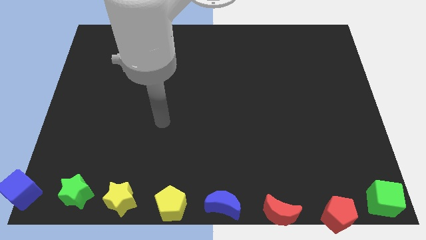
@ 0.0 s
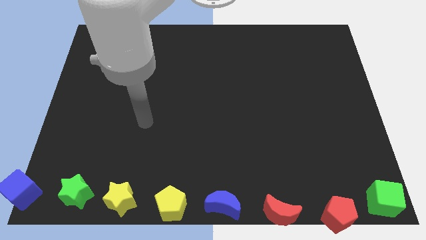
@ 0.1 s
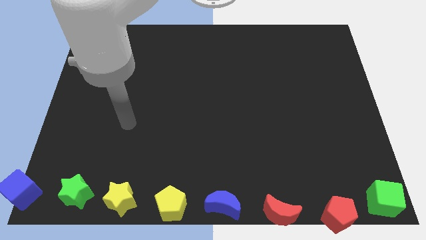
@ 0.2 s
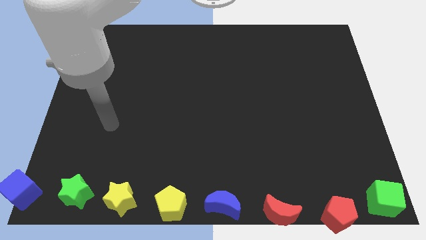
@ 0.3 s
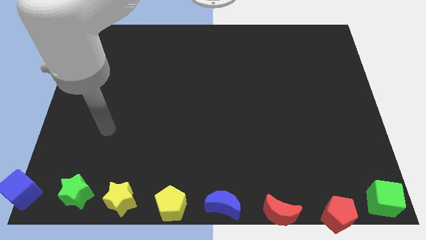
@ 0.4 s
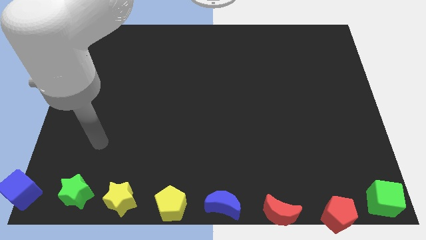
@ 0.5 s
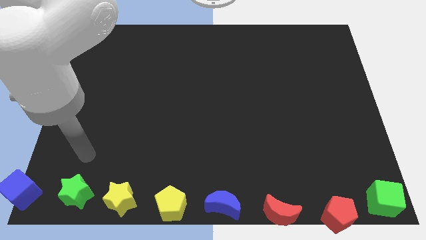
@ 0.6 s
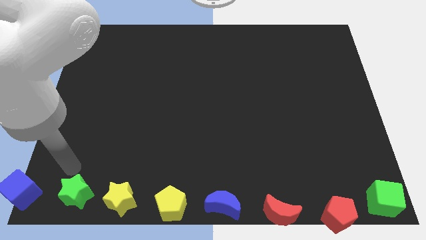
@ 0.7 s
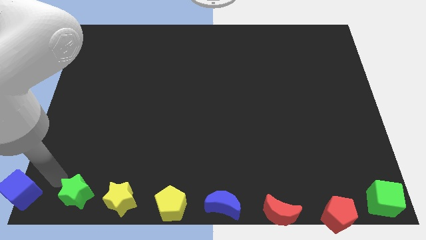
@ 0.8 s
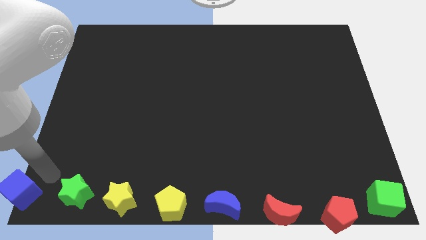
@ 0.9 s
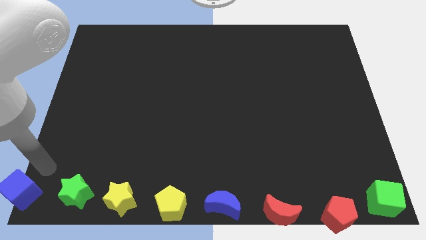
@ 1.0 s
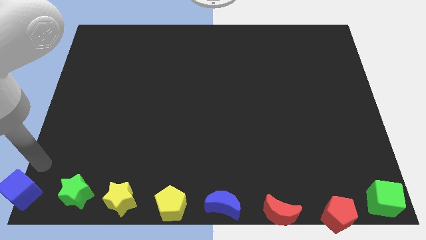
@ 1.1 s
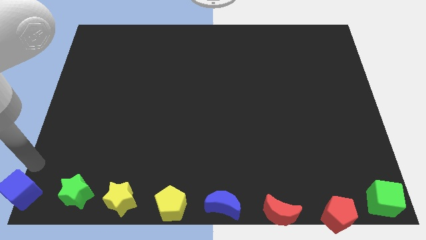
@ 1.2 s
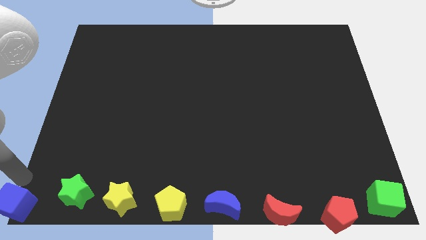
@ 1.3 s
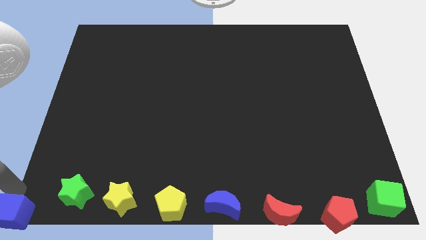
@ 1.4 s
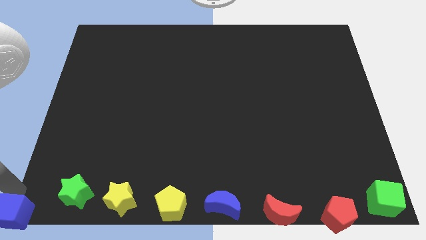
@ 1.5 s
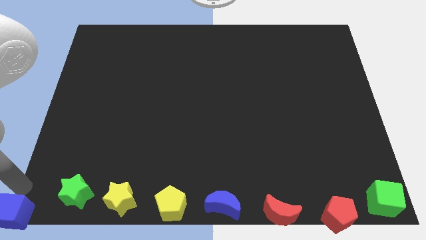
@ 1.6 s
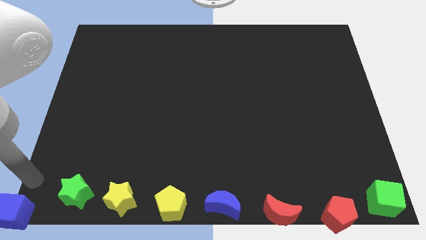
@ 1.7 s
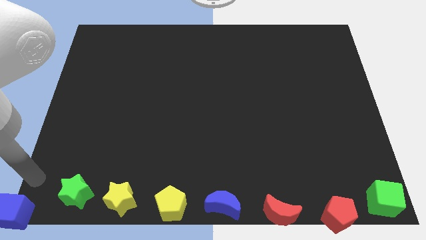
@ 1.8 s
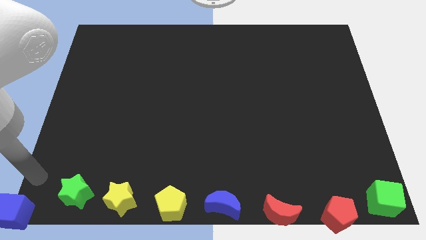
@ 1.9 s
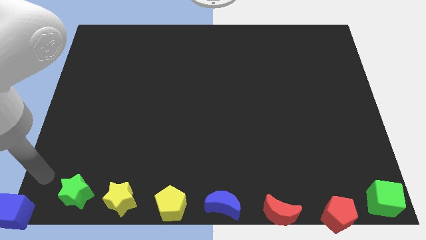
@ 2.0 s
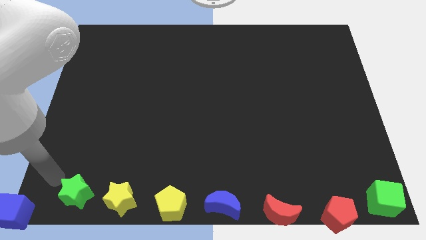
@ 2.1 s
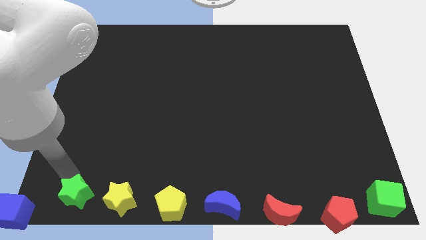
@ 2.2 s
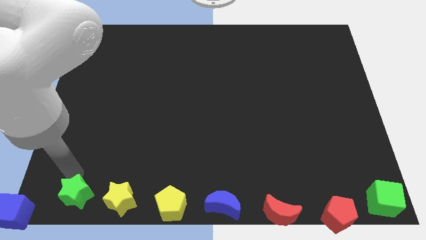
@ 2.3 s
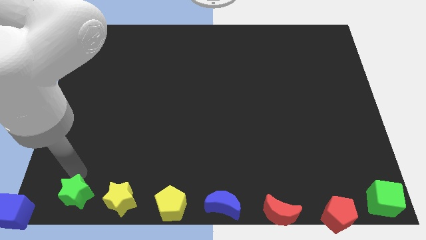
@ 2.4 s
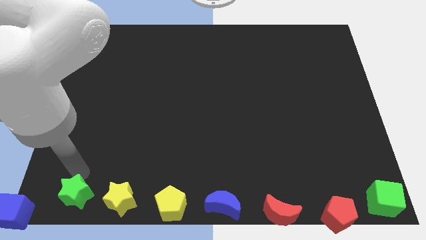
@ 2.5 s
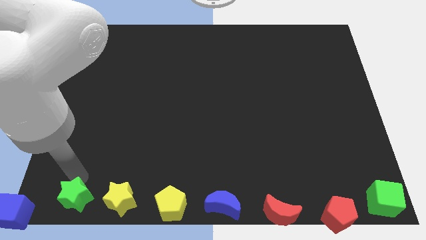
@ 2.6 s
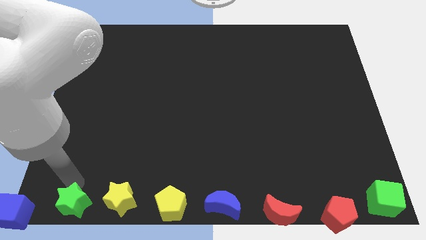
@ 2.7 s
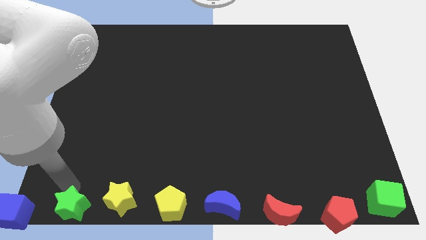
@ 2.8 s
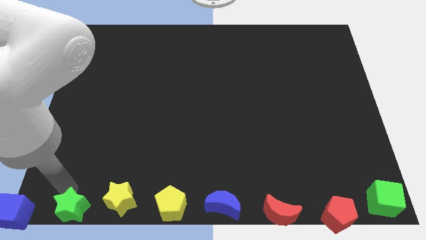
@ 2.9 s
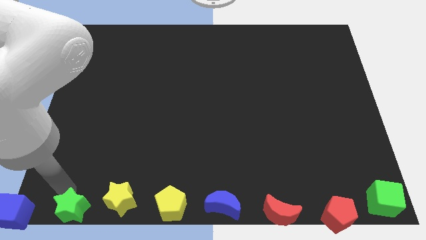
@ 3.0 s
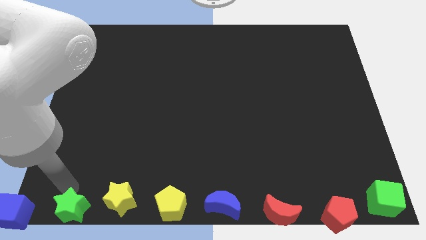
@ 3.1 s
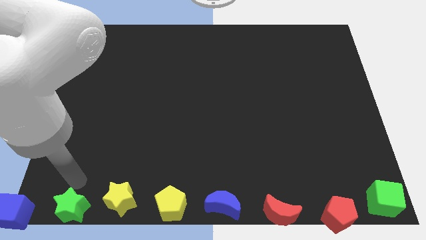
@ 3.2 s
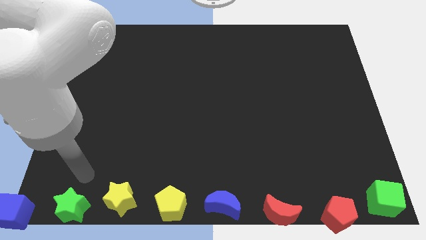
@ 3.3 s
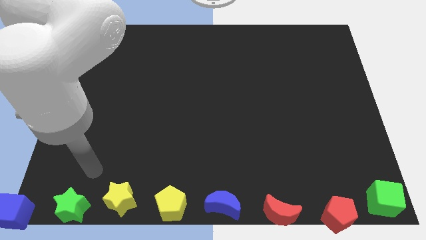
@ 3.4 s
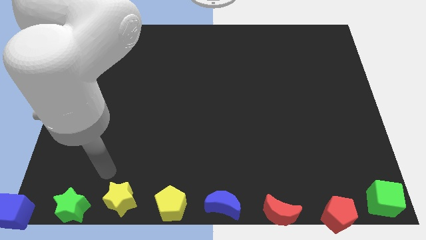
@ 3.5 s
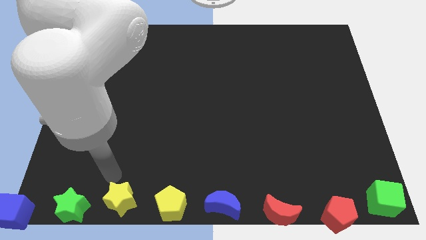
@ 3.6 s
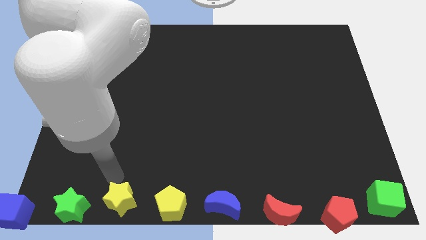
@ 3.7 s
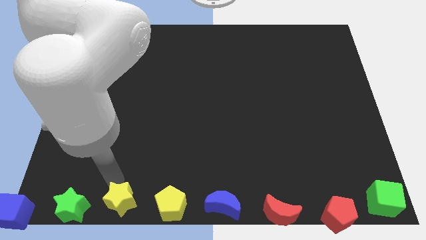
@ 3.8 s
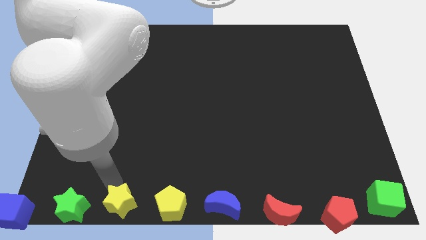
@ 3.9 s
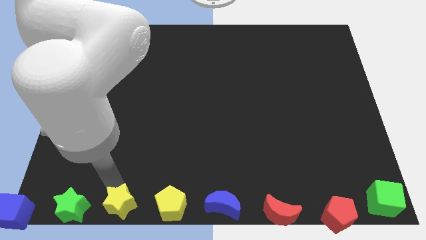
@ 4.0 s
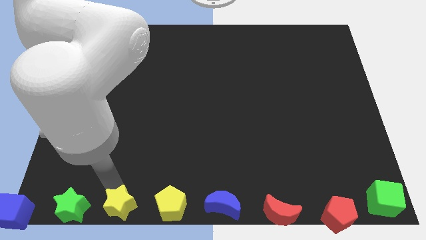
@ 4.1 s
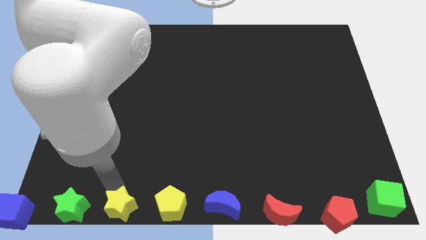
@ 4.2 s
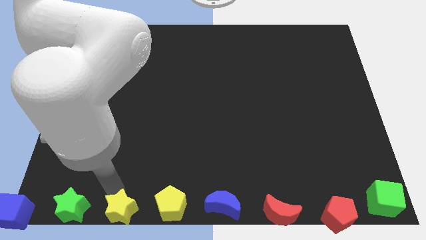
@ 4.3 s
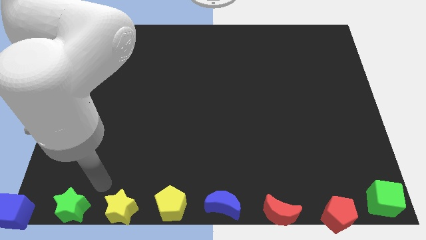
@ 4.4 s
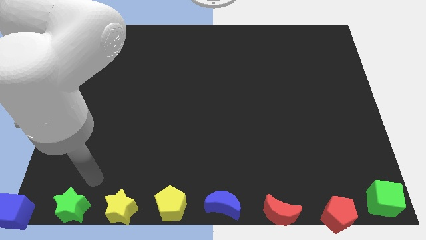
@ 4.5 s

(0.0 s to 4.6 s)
push the blue cube green star and yellow star downwards

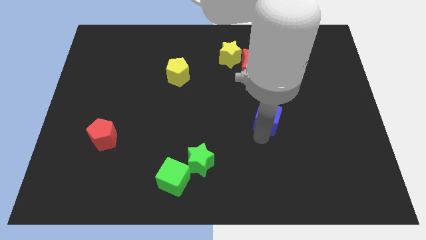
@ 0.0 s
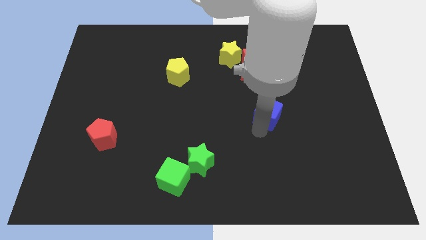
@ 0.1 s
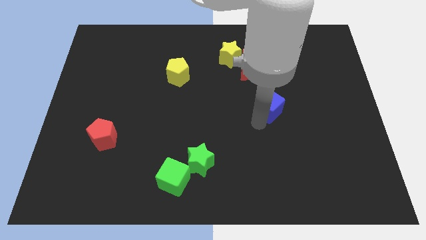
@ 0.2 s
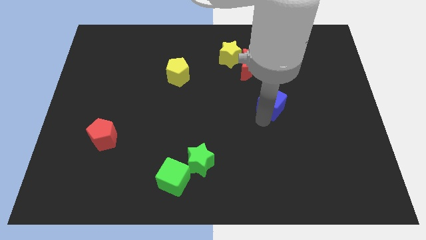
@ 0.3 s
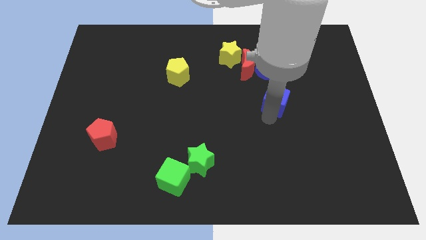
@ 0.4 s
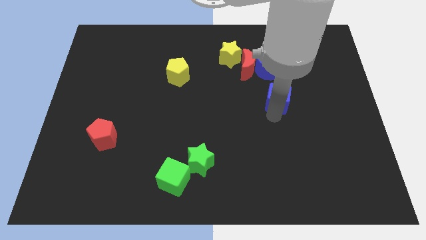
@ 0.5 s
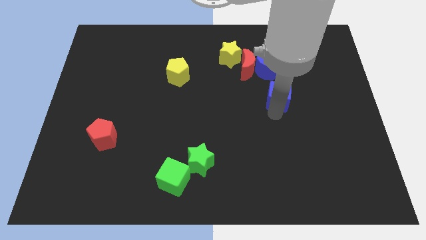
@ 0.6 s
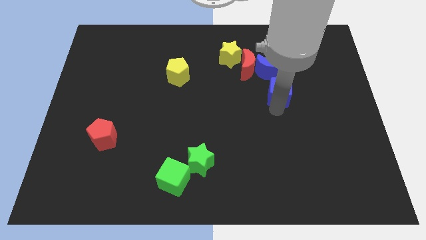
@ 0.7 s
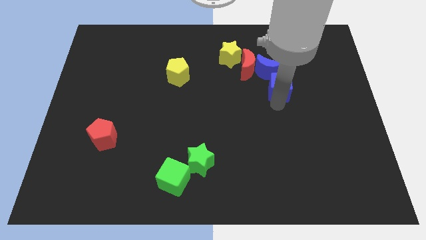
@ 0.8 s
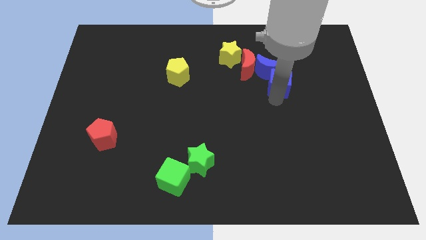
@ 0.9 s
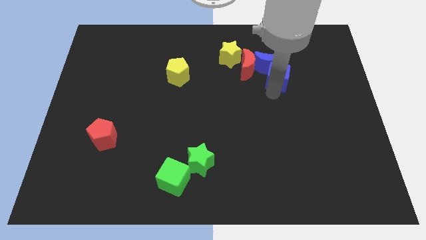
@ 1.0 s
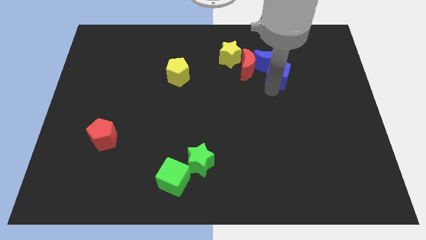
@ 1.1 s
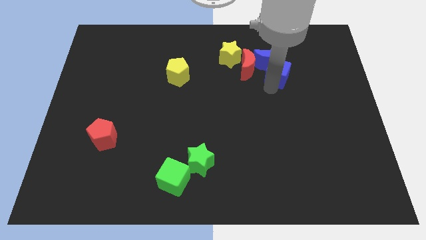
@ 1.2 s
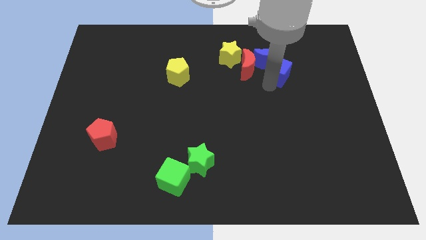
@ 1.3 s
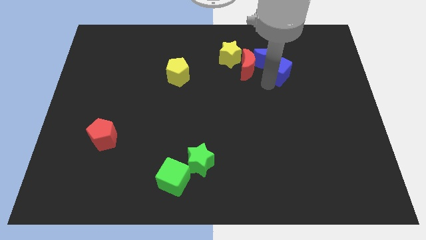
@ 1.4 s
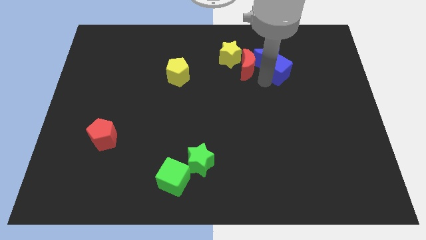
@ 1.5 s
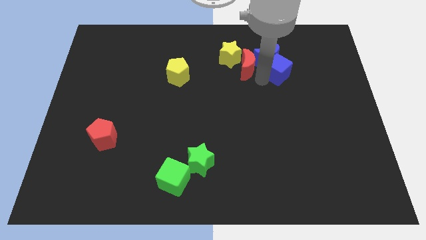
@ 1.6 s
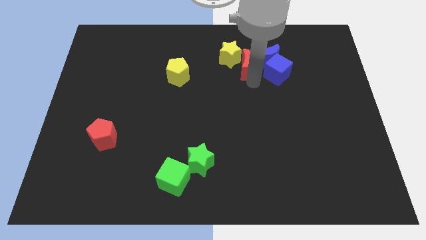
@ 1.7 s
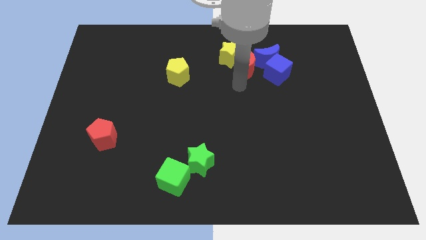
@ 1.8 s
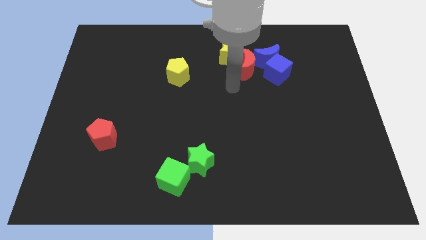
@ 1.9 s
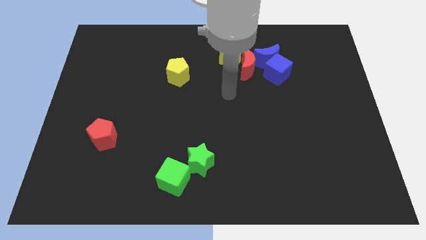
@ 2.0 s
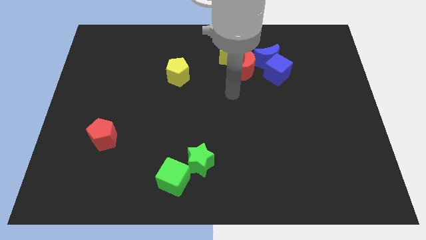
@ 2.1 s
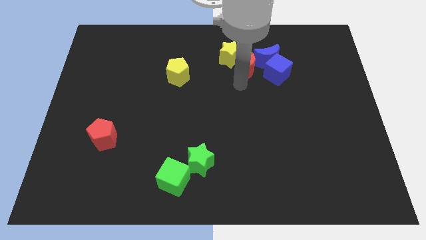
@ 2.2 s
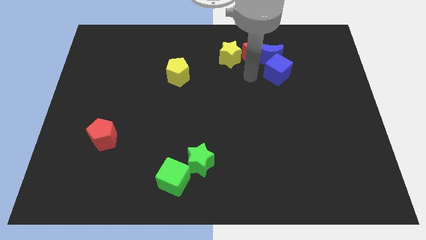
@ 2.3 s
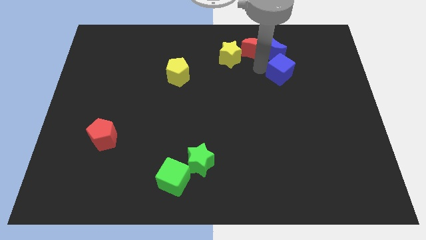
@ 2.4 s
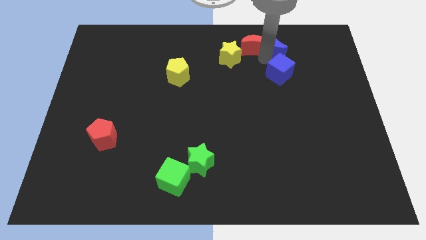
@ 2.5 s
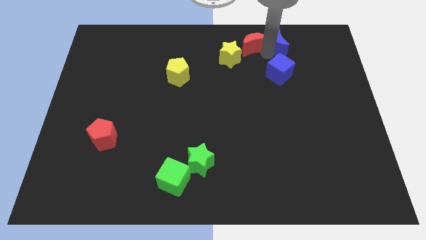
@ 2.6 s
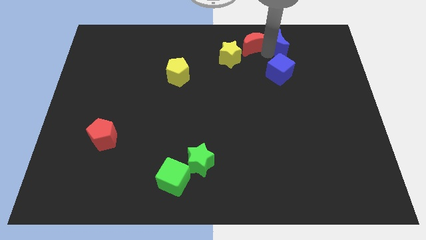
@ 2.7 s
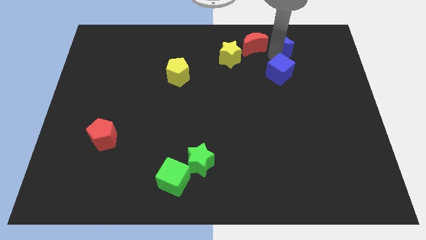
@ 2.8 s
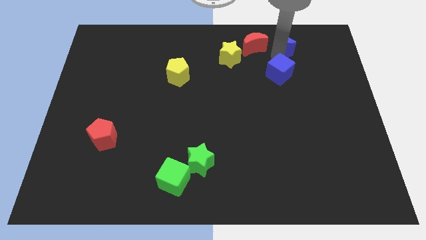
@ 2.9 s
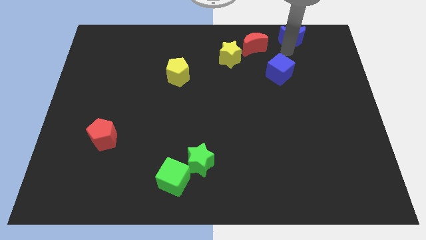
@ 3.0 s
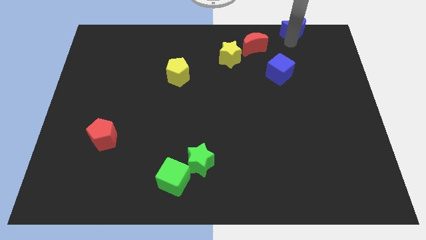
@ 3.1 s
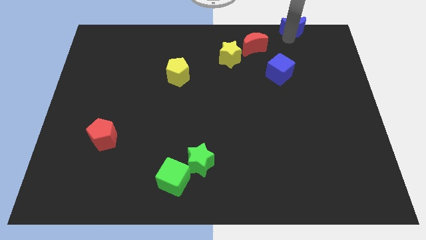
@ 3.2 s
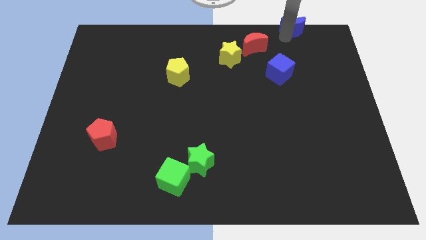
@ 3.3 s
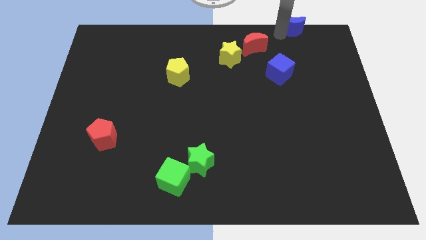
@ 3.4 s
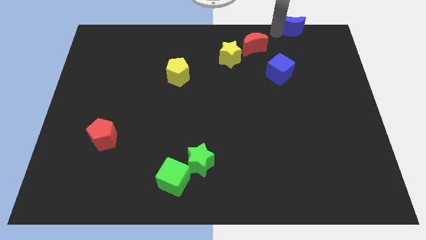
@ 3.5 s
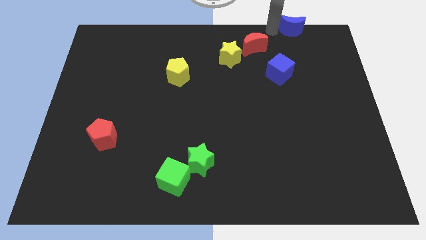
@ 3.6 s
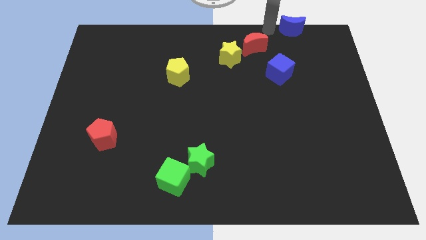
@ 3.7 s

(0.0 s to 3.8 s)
place both the blue blocks diagonal to red moon

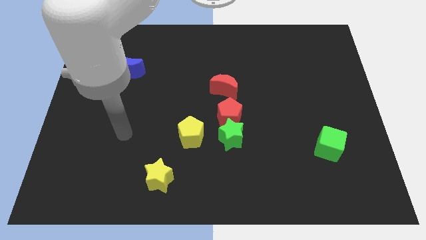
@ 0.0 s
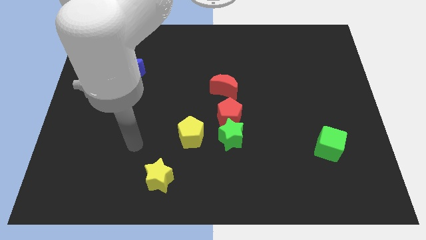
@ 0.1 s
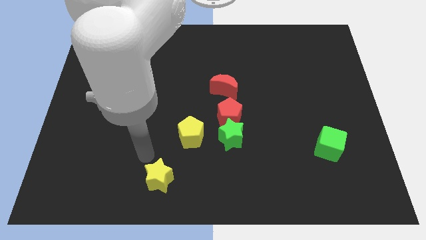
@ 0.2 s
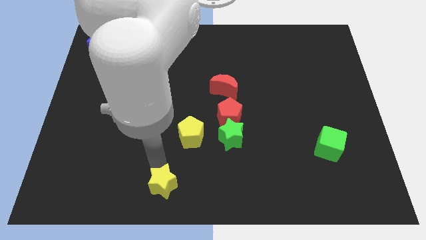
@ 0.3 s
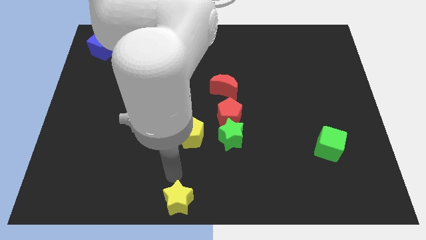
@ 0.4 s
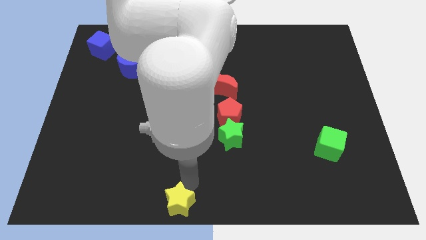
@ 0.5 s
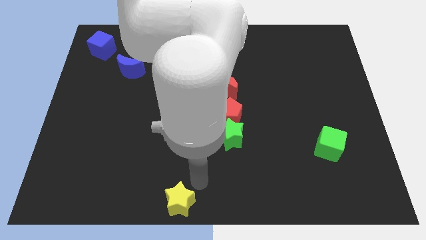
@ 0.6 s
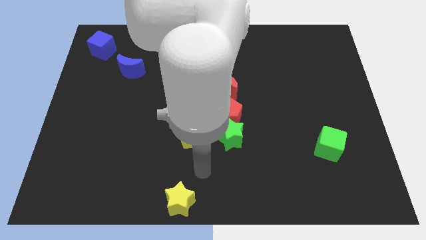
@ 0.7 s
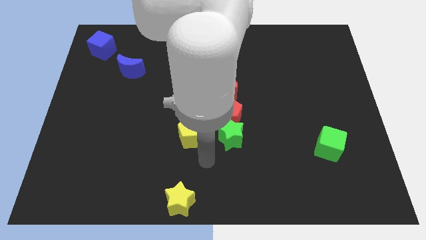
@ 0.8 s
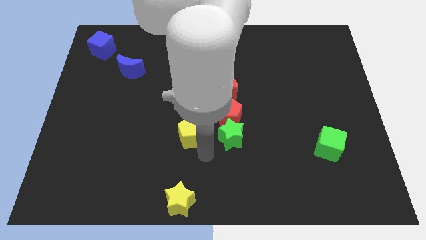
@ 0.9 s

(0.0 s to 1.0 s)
move the yellow star down slightly
